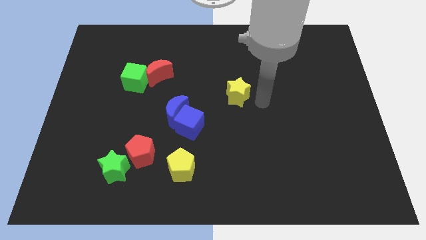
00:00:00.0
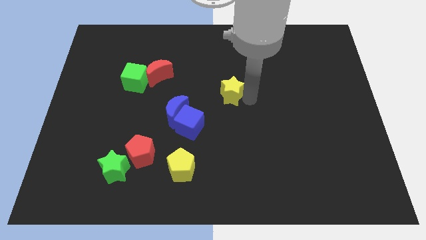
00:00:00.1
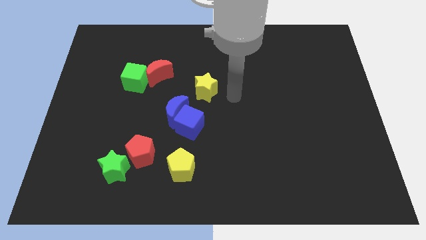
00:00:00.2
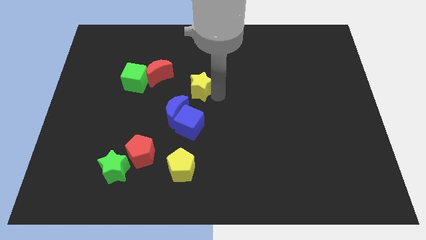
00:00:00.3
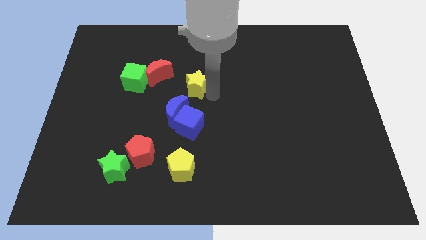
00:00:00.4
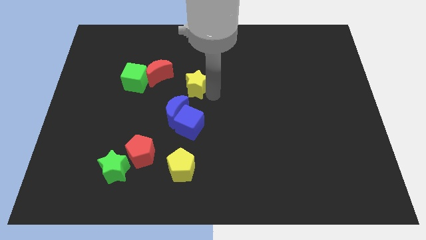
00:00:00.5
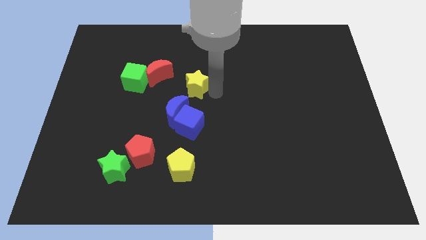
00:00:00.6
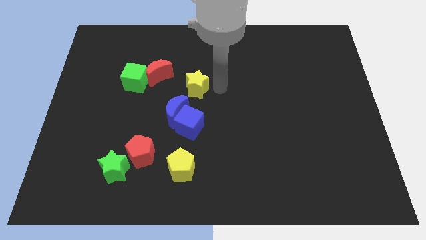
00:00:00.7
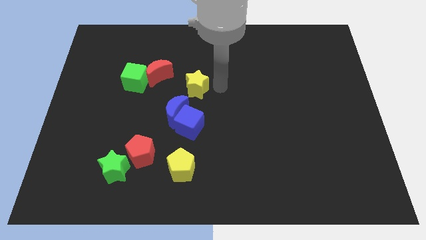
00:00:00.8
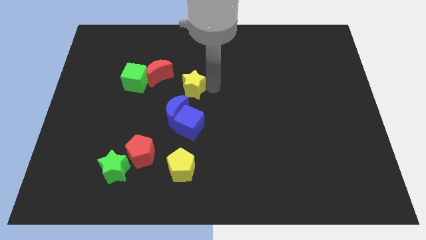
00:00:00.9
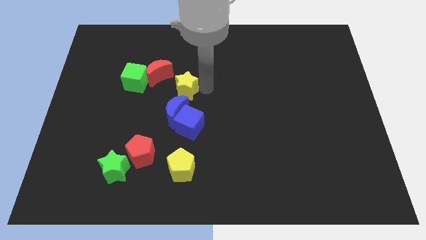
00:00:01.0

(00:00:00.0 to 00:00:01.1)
place the yellow star above the blue moon

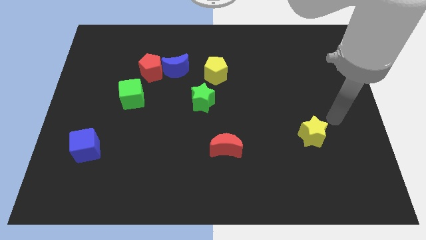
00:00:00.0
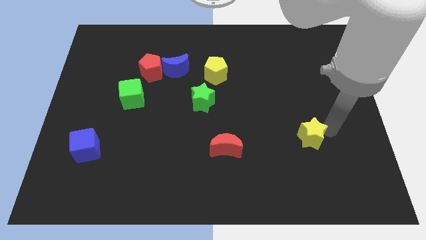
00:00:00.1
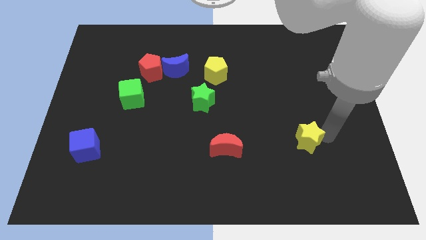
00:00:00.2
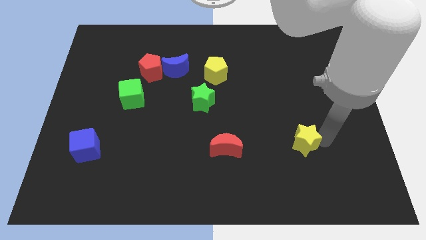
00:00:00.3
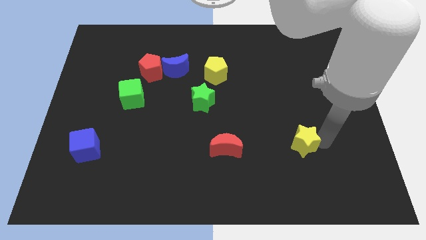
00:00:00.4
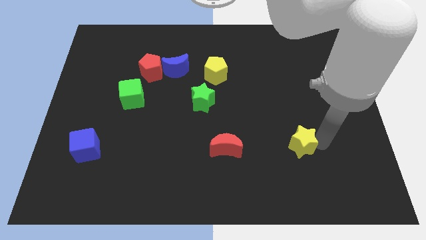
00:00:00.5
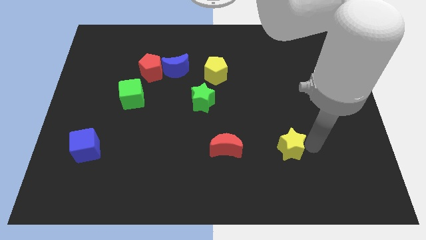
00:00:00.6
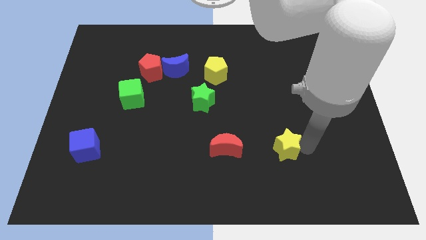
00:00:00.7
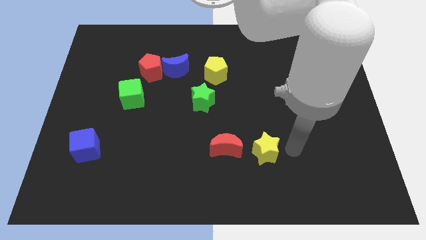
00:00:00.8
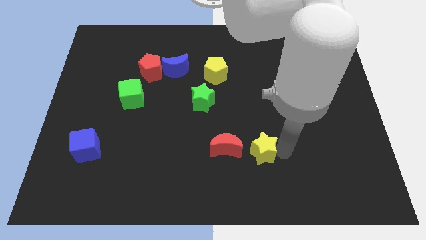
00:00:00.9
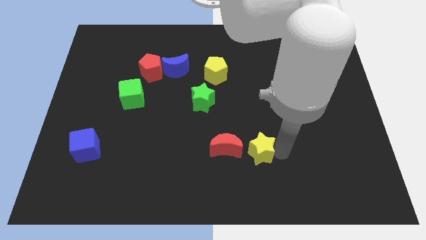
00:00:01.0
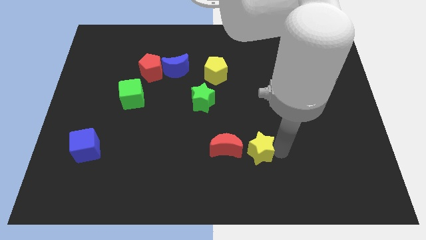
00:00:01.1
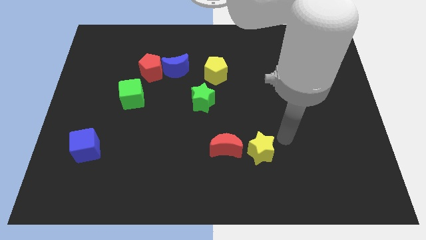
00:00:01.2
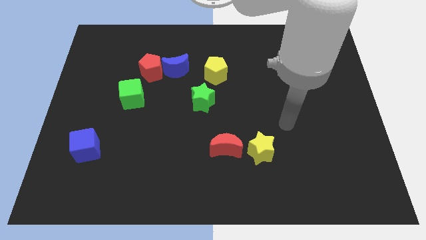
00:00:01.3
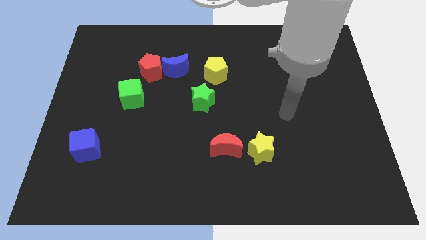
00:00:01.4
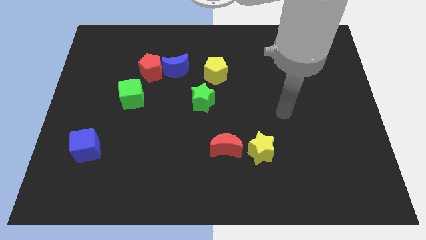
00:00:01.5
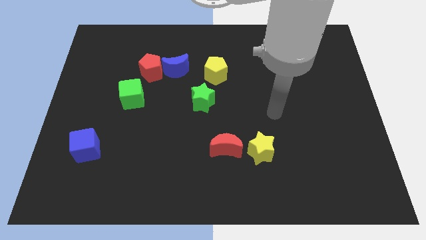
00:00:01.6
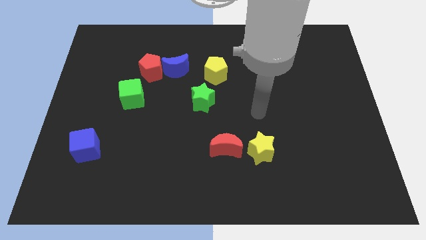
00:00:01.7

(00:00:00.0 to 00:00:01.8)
place yellow star beside red crescent

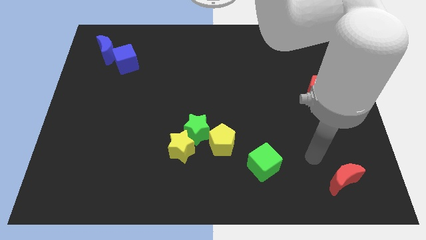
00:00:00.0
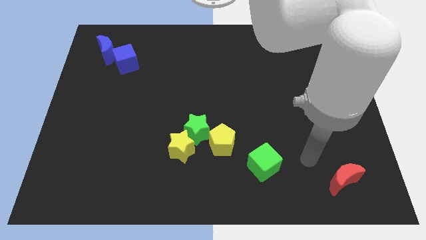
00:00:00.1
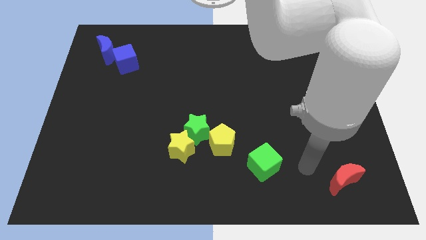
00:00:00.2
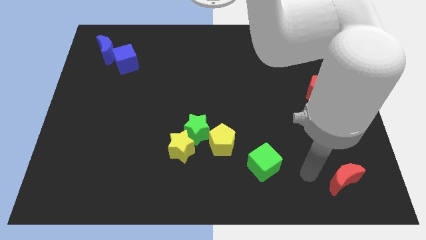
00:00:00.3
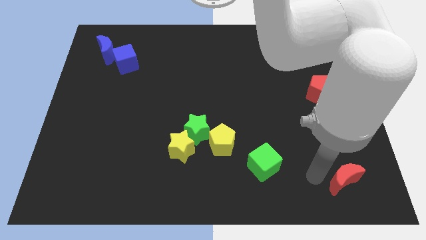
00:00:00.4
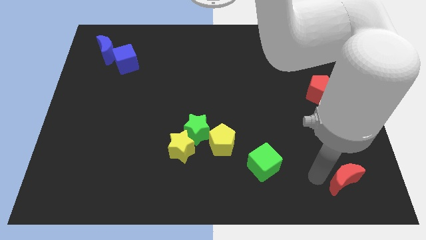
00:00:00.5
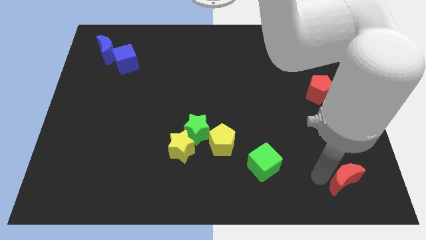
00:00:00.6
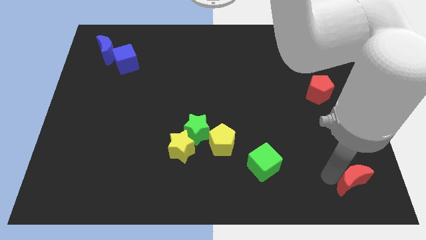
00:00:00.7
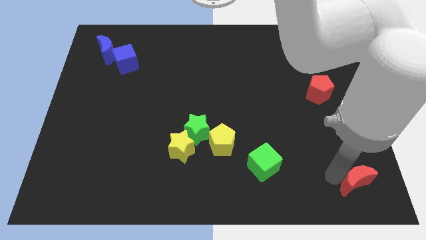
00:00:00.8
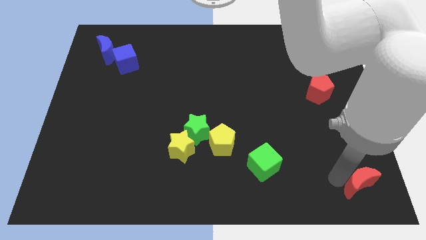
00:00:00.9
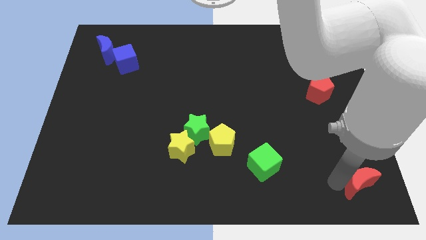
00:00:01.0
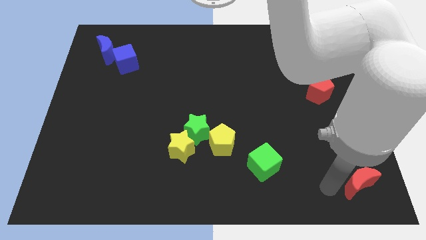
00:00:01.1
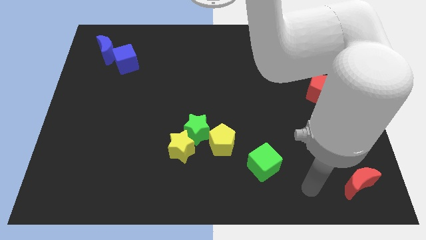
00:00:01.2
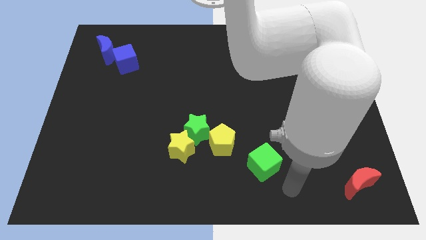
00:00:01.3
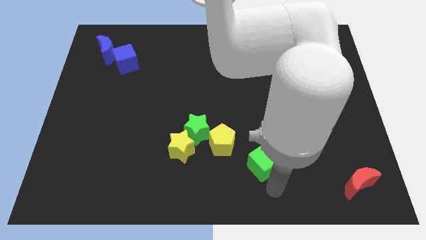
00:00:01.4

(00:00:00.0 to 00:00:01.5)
slightly move the red crescent to the bottom right of the board

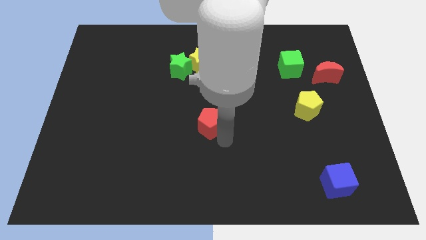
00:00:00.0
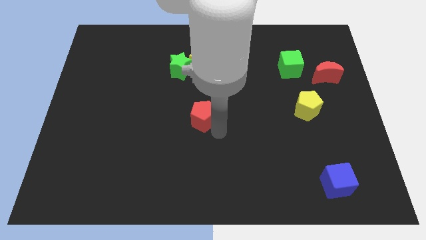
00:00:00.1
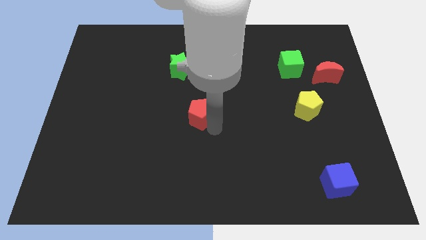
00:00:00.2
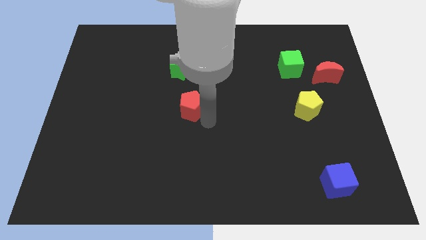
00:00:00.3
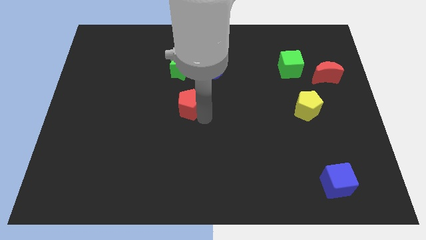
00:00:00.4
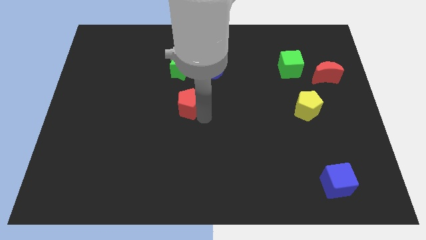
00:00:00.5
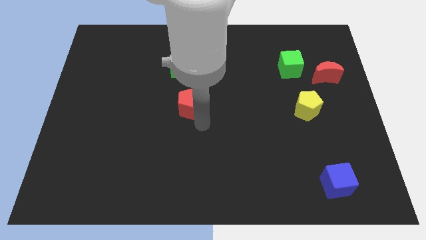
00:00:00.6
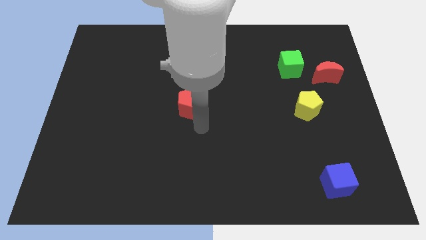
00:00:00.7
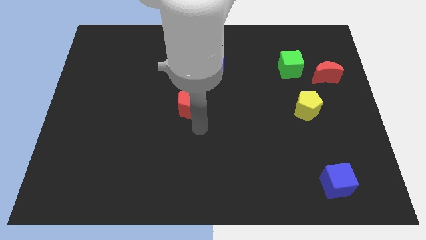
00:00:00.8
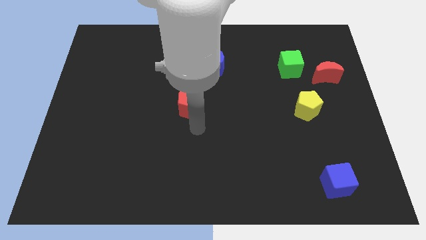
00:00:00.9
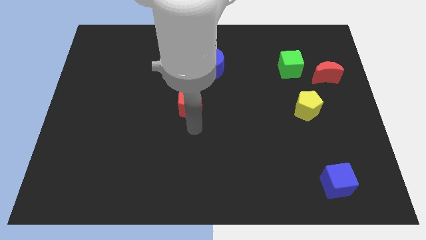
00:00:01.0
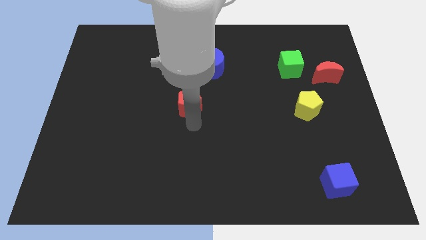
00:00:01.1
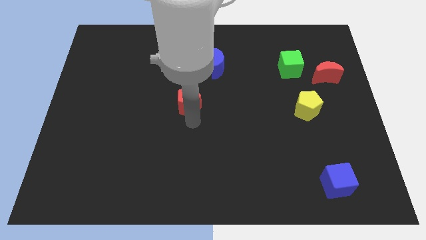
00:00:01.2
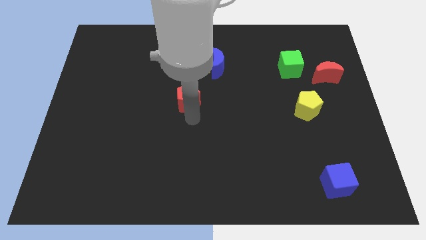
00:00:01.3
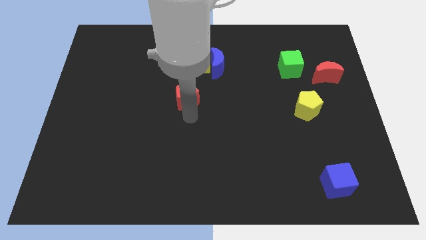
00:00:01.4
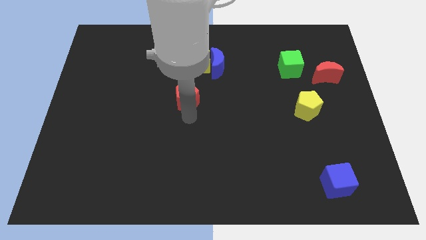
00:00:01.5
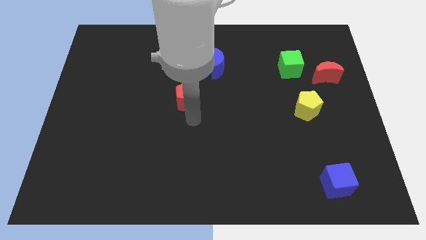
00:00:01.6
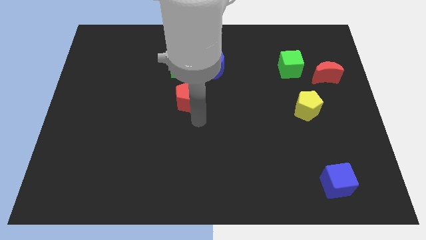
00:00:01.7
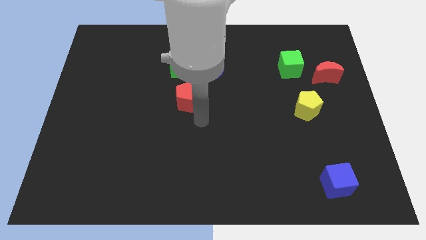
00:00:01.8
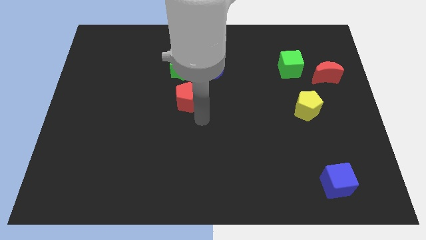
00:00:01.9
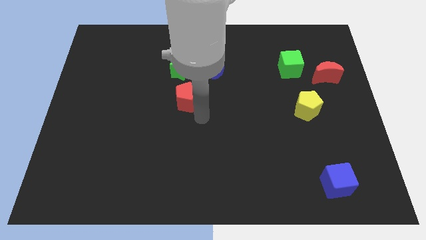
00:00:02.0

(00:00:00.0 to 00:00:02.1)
push the red pentagon at the bottom of the green star

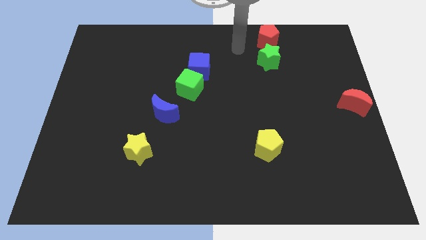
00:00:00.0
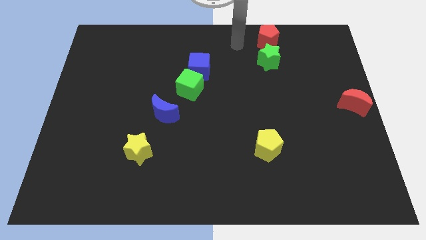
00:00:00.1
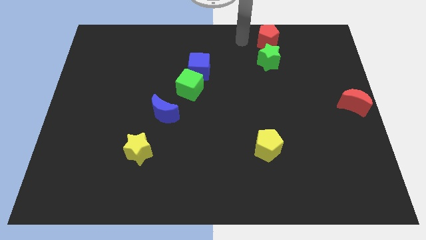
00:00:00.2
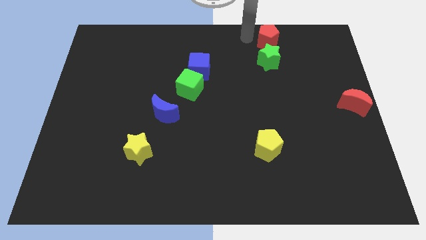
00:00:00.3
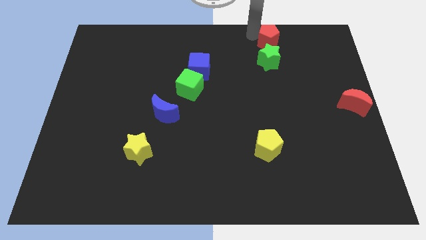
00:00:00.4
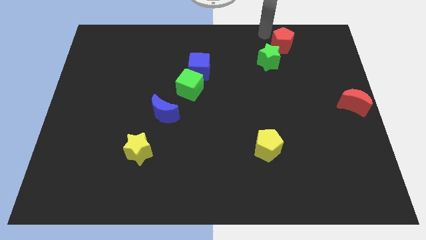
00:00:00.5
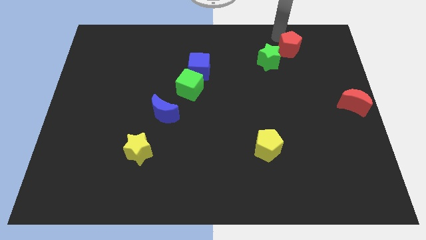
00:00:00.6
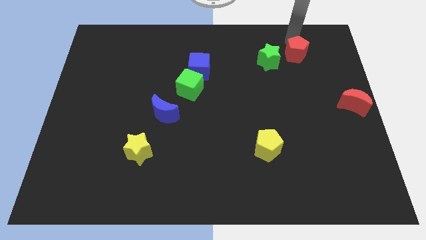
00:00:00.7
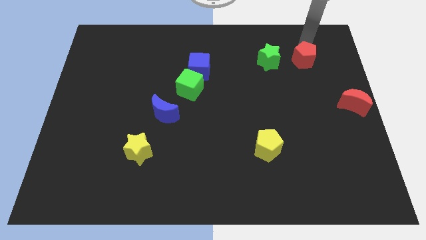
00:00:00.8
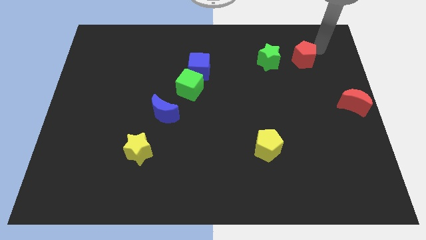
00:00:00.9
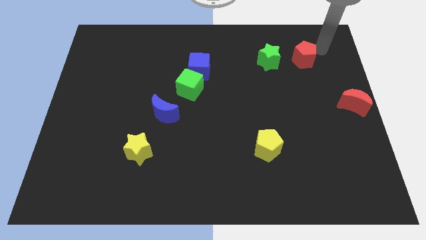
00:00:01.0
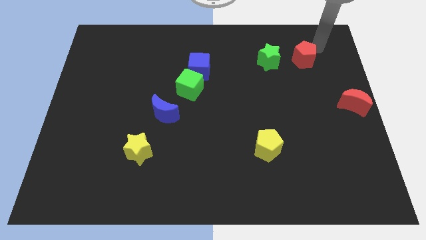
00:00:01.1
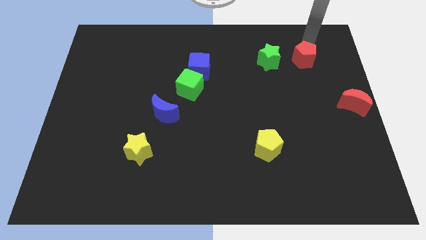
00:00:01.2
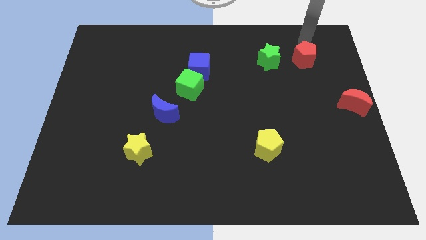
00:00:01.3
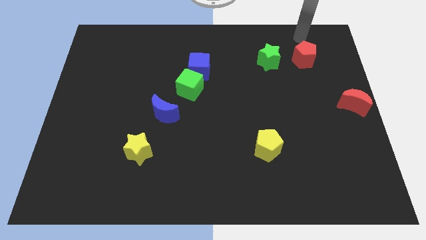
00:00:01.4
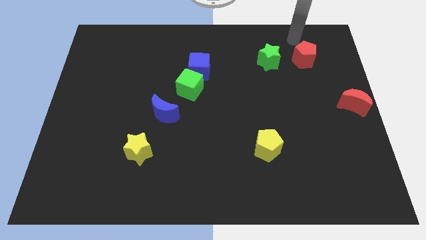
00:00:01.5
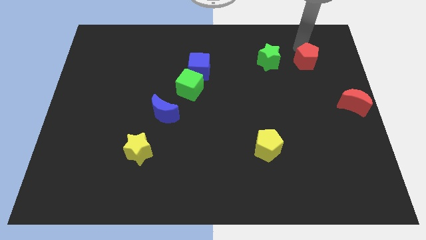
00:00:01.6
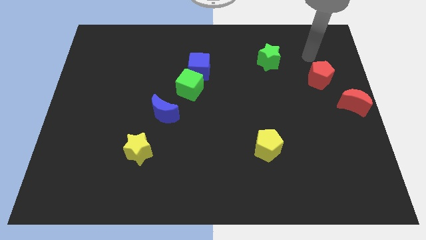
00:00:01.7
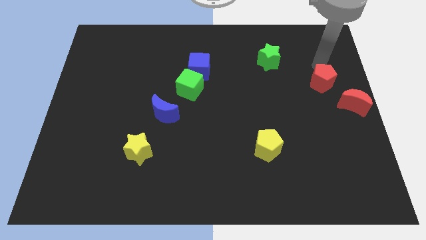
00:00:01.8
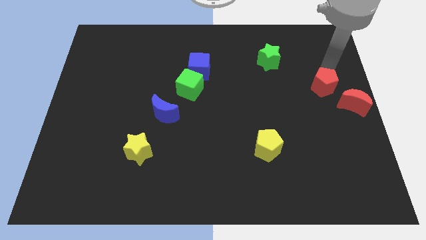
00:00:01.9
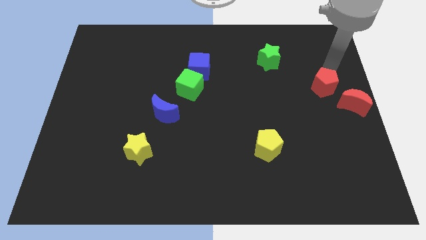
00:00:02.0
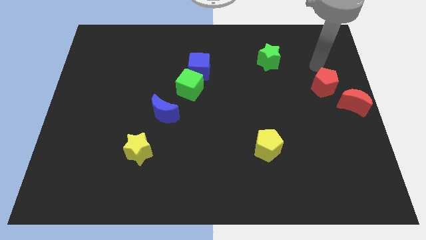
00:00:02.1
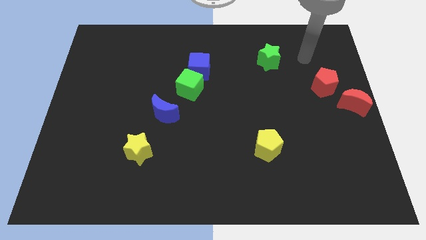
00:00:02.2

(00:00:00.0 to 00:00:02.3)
move the red pentagon top left side of the red moon
